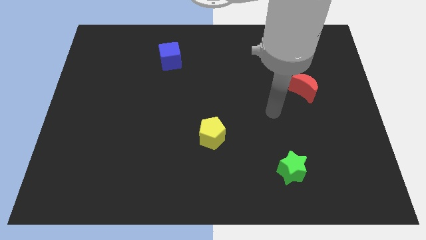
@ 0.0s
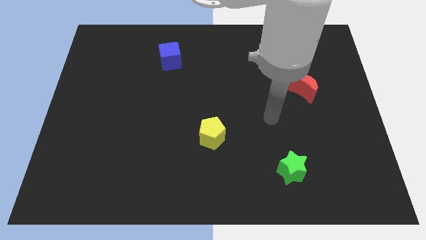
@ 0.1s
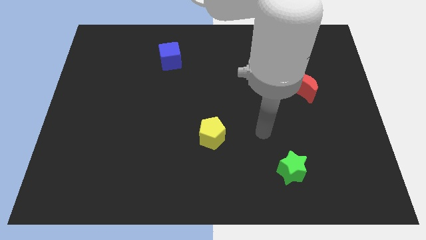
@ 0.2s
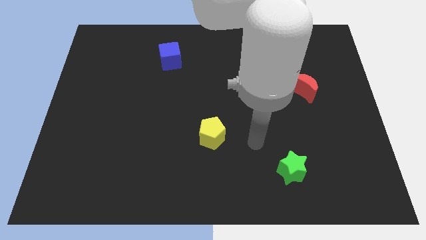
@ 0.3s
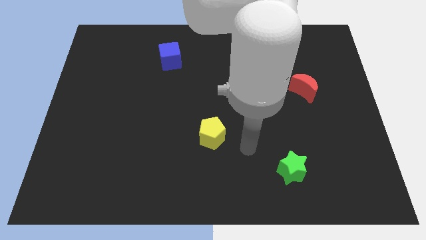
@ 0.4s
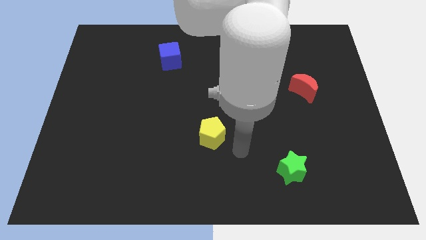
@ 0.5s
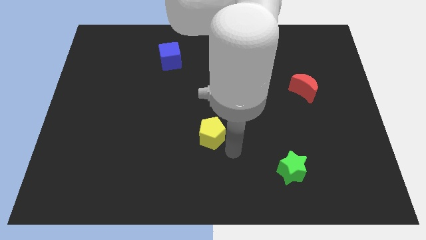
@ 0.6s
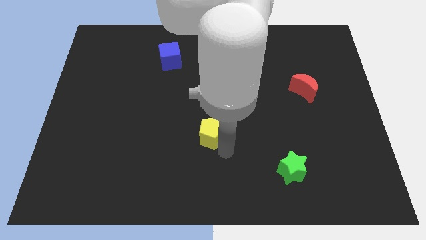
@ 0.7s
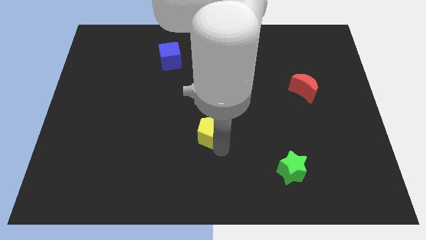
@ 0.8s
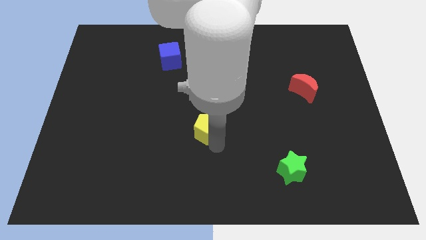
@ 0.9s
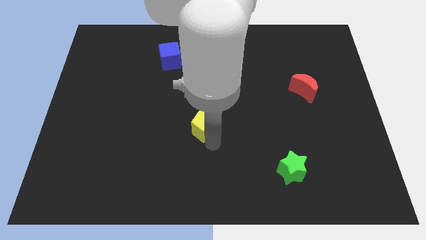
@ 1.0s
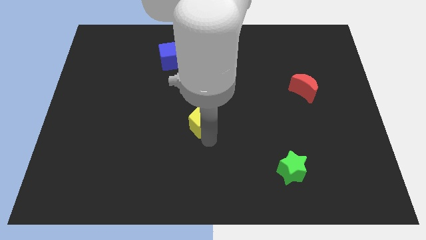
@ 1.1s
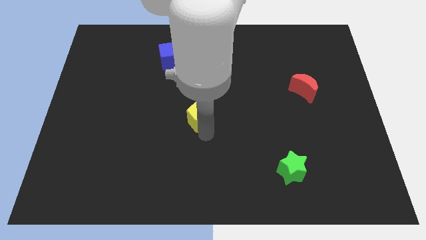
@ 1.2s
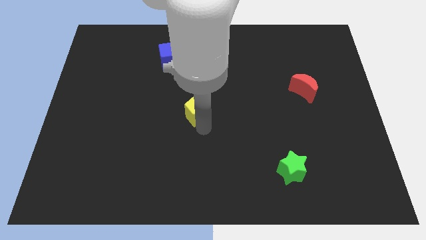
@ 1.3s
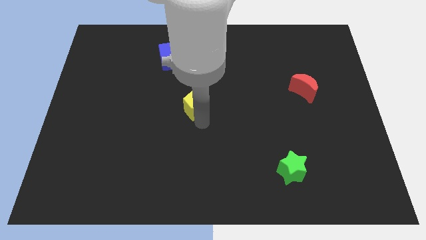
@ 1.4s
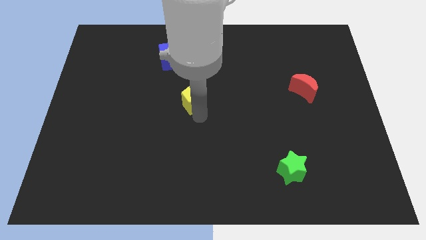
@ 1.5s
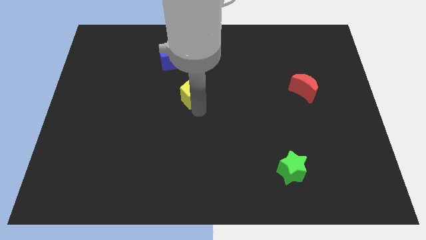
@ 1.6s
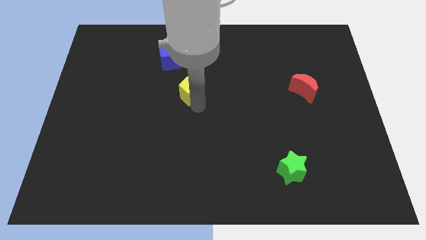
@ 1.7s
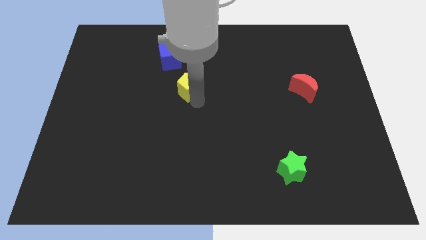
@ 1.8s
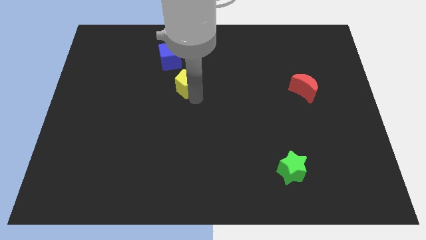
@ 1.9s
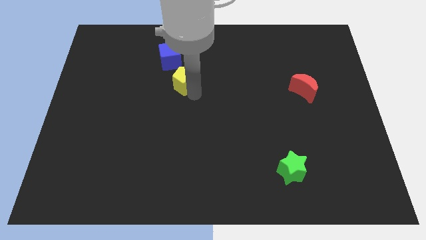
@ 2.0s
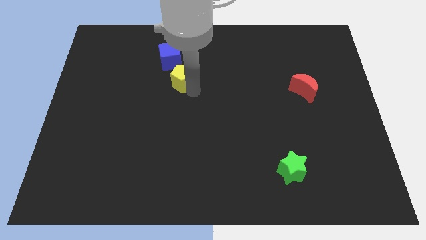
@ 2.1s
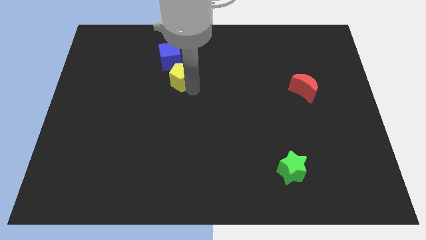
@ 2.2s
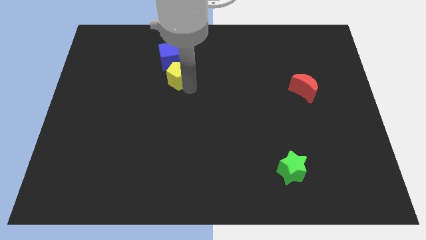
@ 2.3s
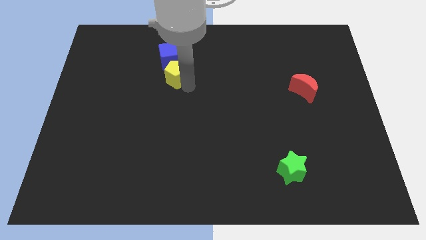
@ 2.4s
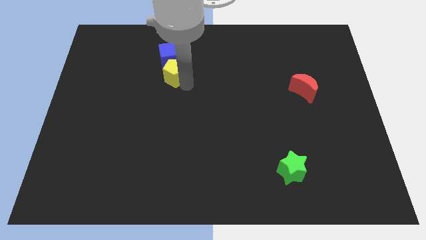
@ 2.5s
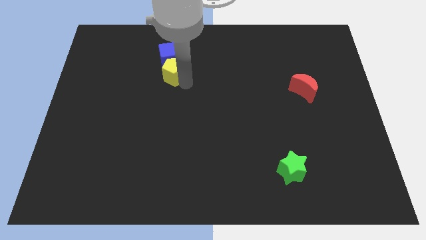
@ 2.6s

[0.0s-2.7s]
move the yellow block towards the blue block

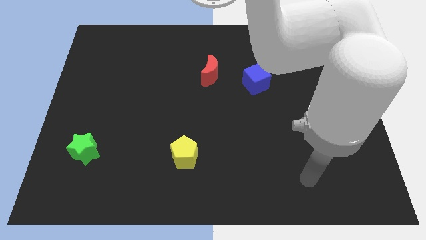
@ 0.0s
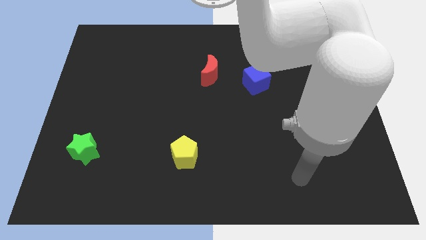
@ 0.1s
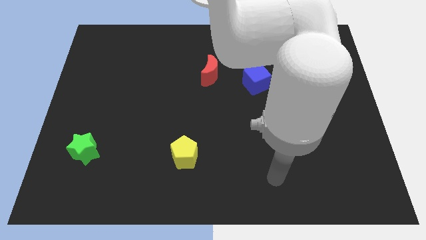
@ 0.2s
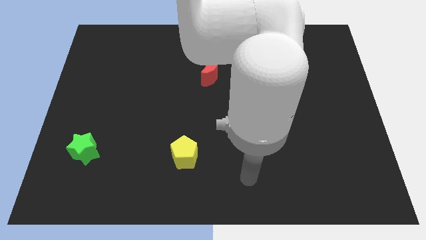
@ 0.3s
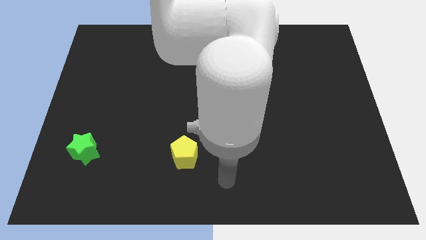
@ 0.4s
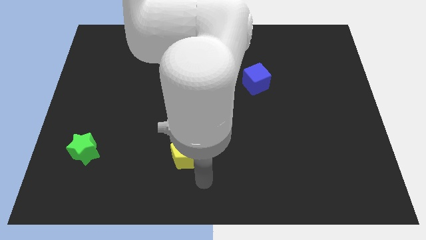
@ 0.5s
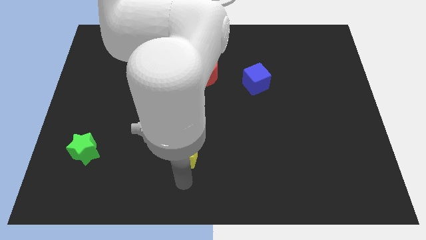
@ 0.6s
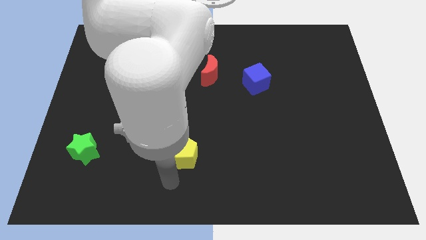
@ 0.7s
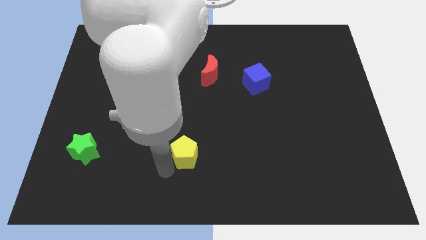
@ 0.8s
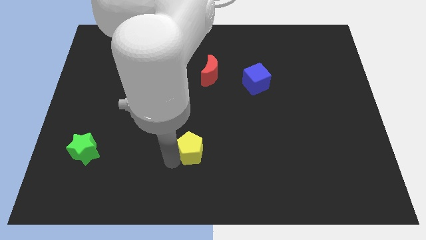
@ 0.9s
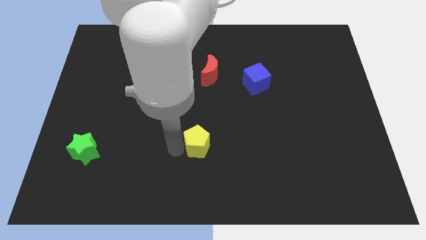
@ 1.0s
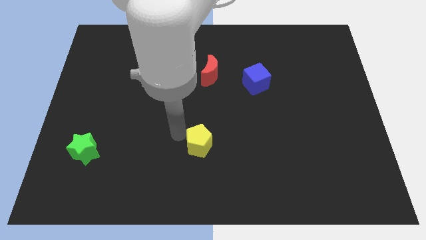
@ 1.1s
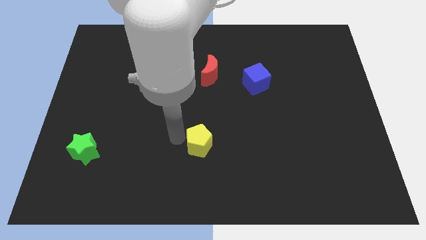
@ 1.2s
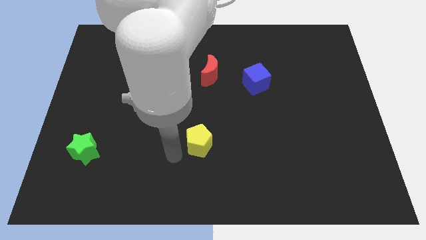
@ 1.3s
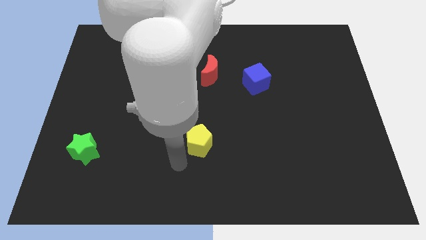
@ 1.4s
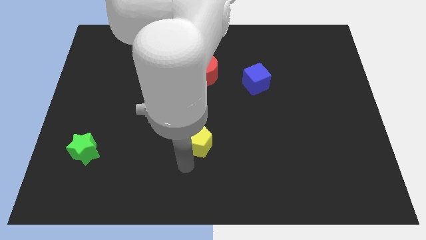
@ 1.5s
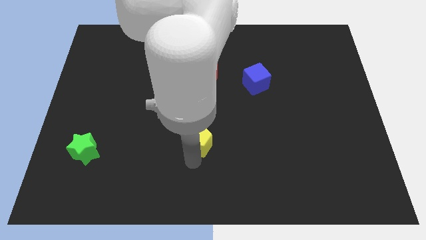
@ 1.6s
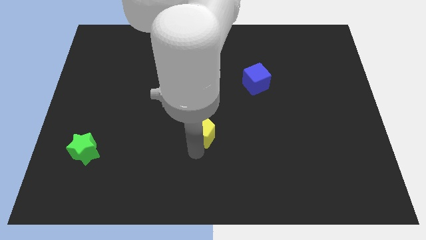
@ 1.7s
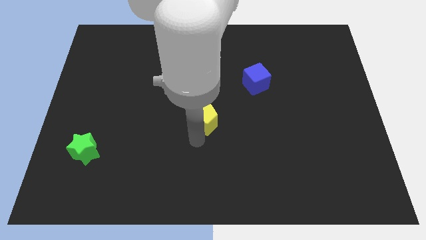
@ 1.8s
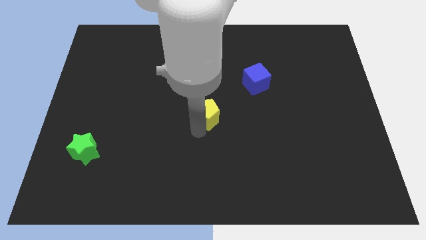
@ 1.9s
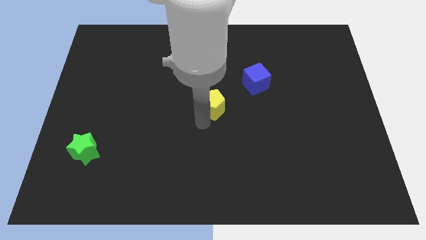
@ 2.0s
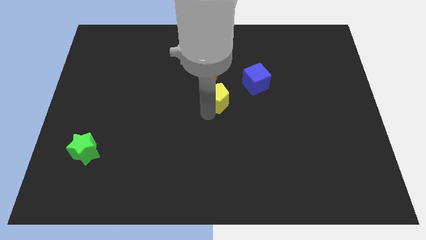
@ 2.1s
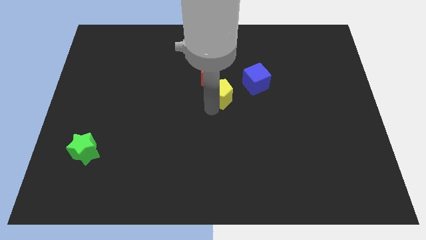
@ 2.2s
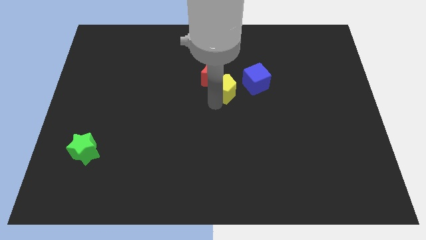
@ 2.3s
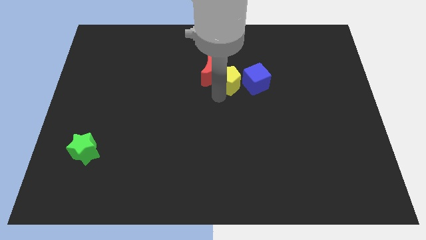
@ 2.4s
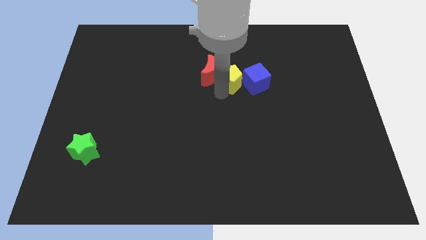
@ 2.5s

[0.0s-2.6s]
push the pentagon towards the moon

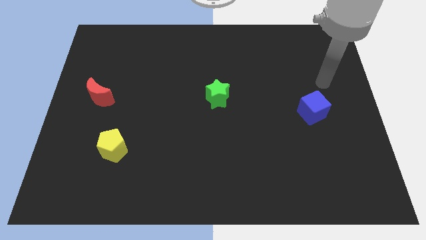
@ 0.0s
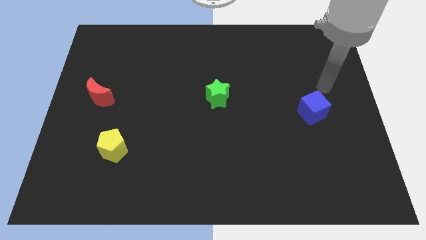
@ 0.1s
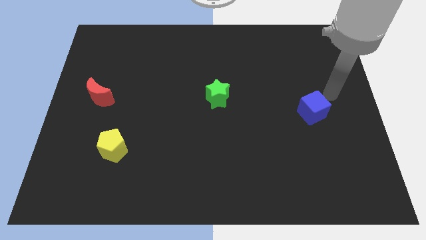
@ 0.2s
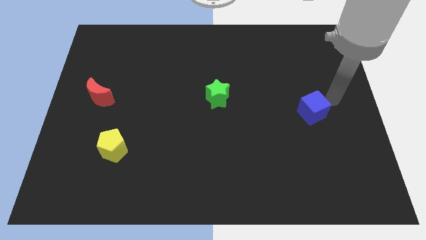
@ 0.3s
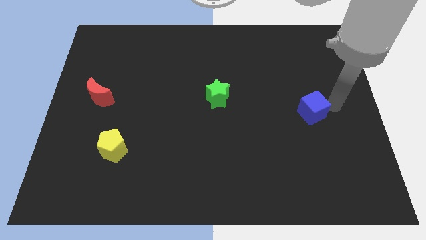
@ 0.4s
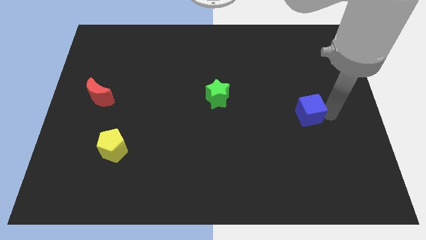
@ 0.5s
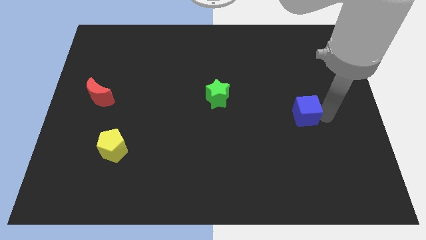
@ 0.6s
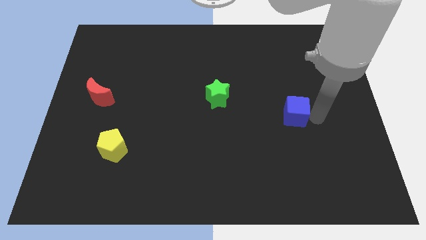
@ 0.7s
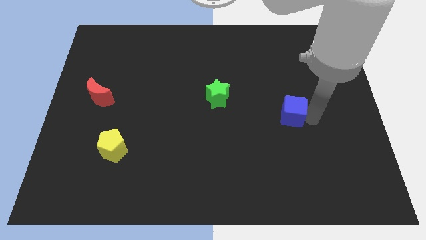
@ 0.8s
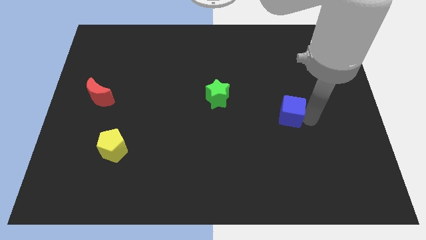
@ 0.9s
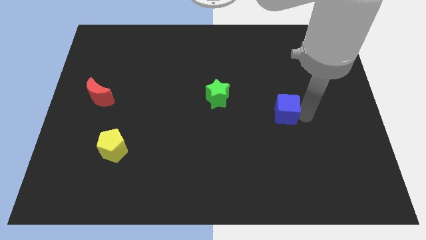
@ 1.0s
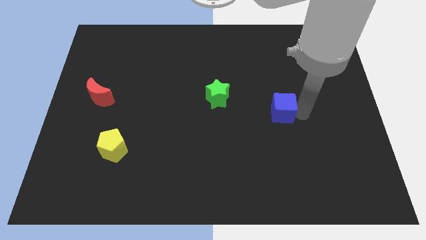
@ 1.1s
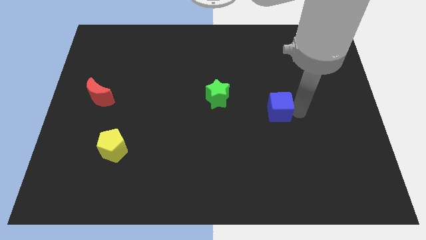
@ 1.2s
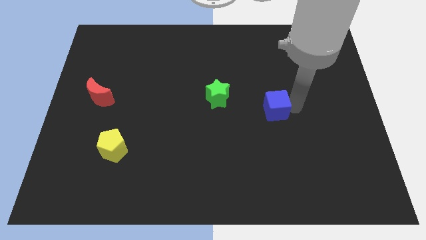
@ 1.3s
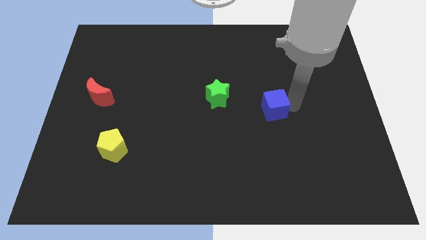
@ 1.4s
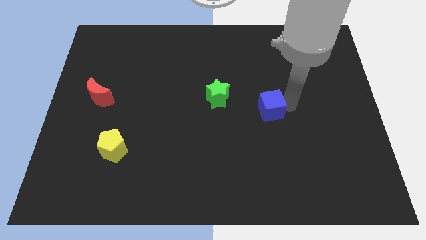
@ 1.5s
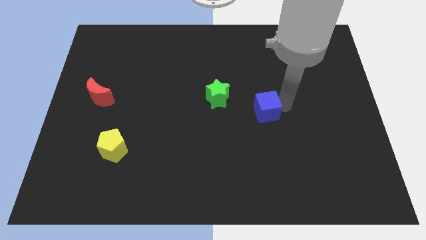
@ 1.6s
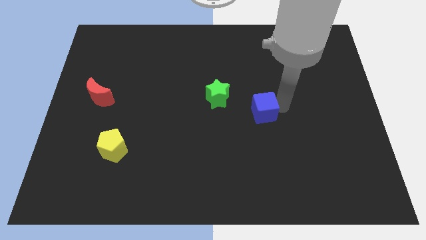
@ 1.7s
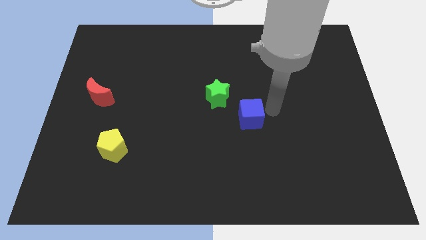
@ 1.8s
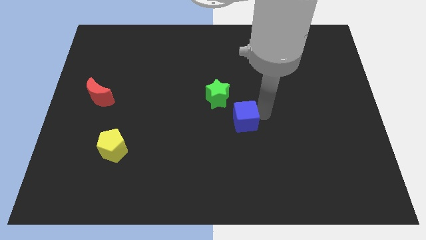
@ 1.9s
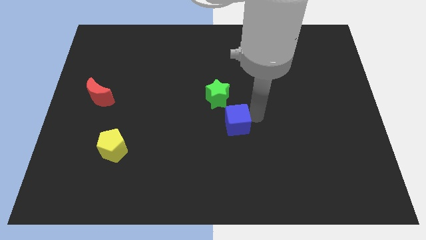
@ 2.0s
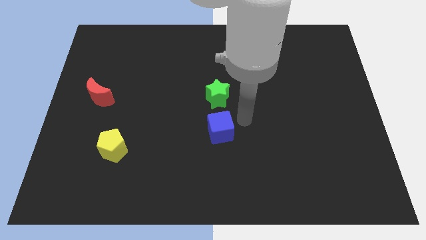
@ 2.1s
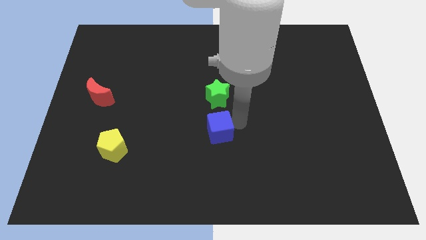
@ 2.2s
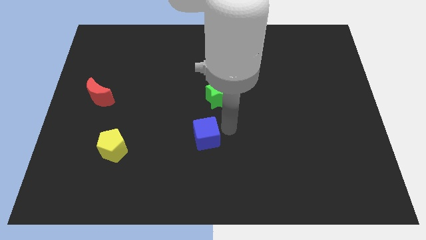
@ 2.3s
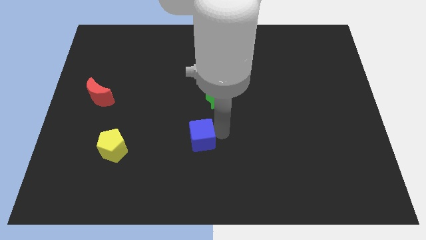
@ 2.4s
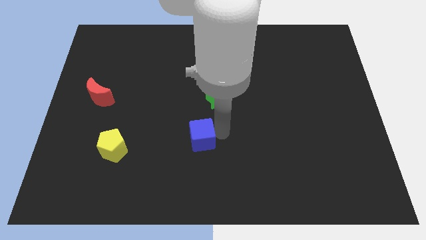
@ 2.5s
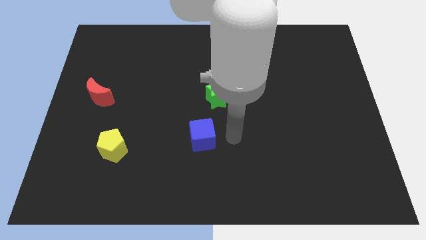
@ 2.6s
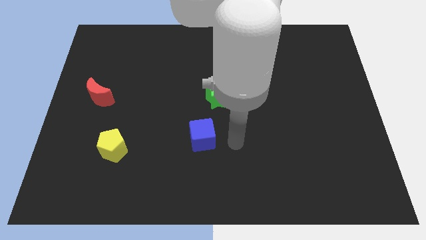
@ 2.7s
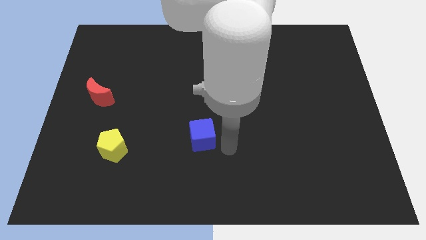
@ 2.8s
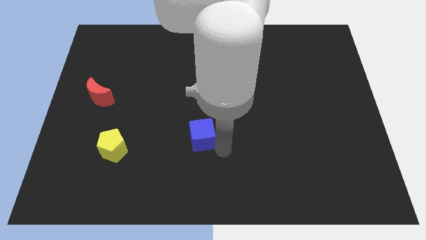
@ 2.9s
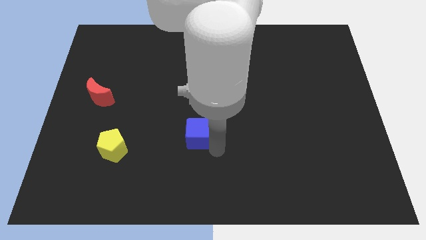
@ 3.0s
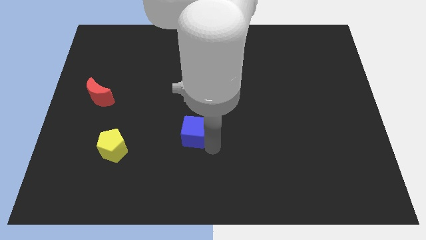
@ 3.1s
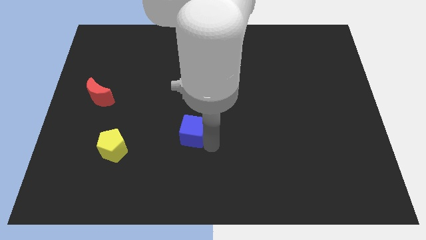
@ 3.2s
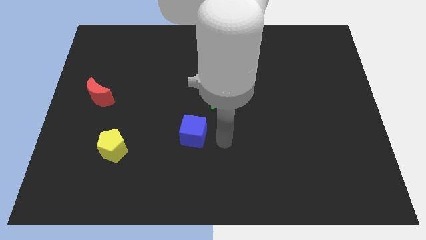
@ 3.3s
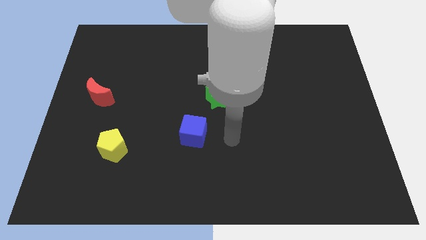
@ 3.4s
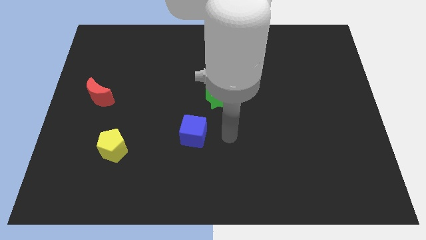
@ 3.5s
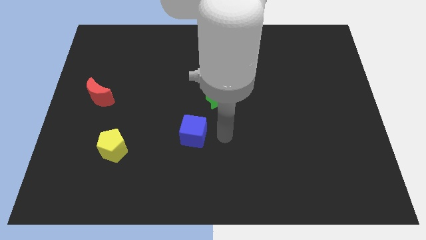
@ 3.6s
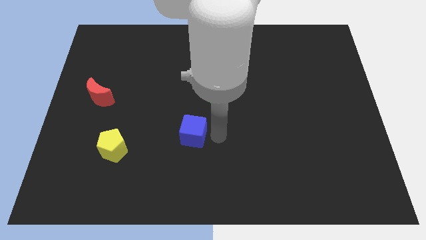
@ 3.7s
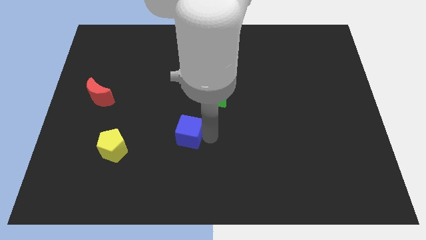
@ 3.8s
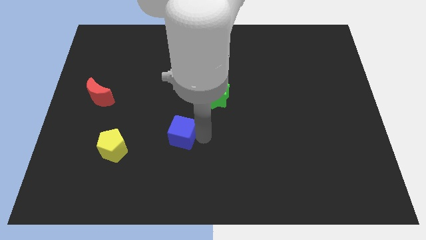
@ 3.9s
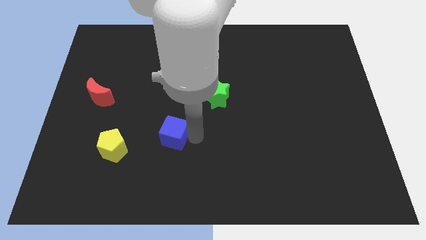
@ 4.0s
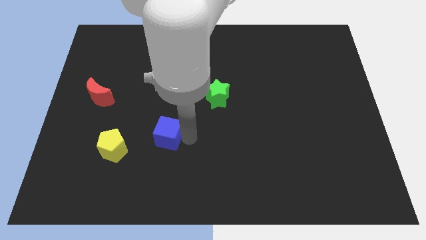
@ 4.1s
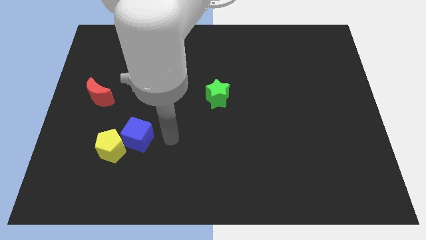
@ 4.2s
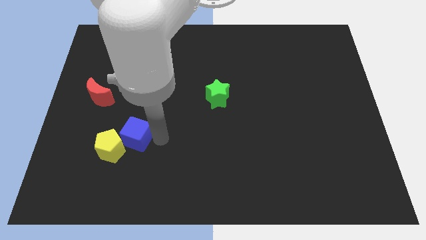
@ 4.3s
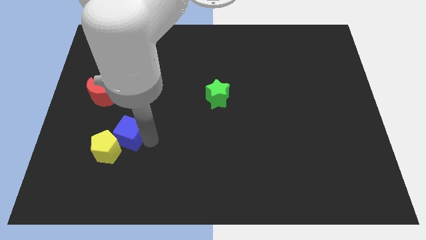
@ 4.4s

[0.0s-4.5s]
push the blue block towards the pentagon
